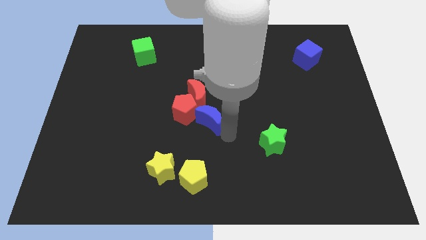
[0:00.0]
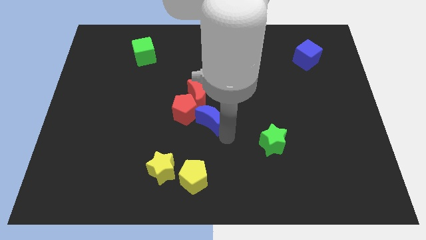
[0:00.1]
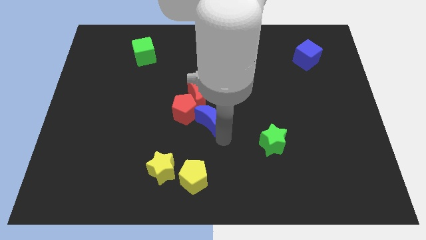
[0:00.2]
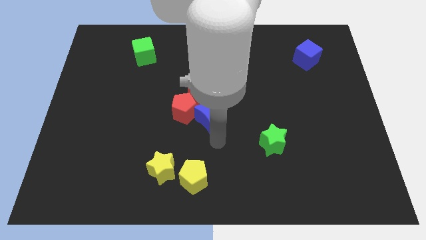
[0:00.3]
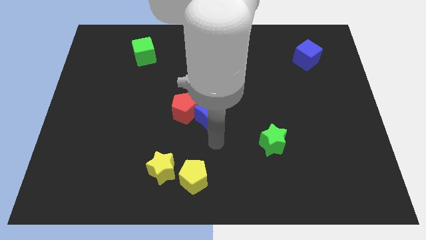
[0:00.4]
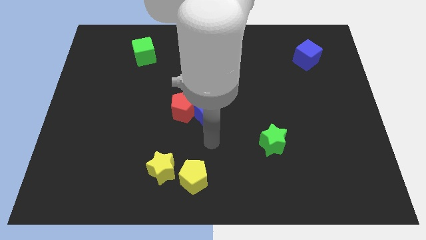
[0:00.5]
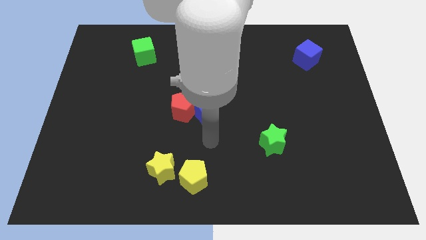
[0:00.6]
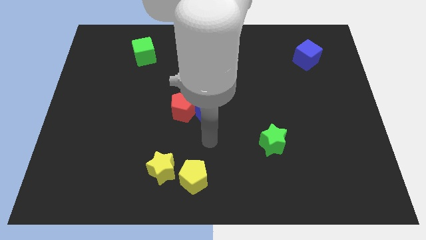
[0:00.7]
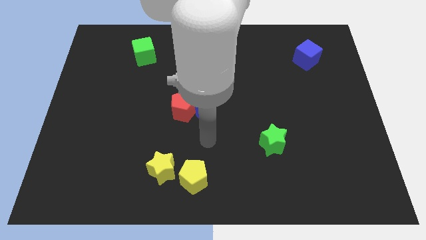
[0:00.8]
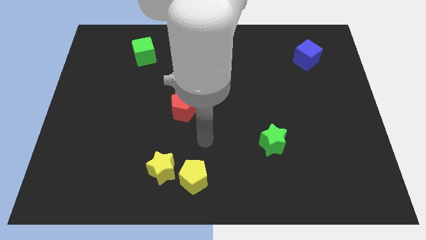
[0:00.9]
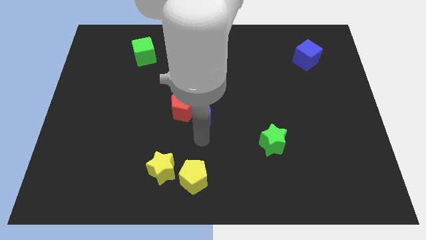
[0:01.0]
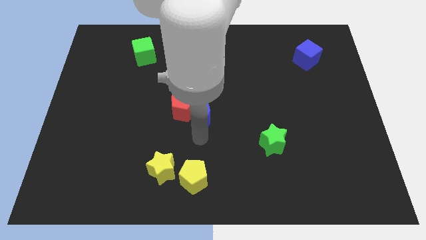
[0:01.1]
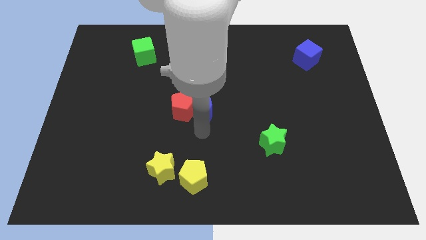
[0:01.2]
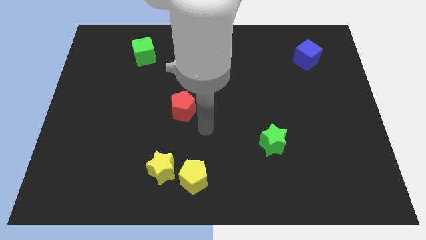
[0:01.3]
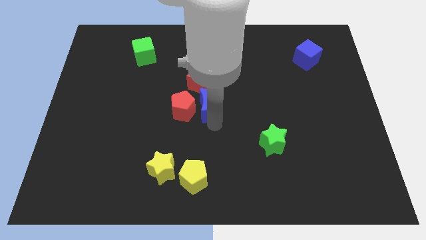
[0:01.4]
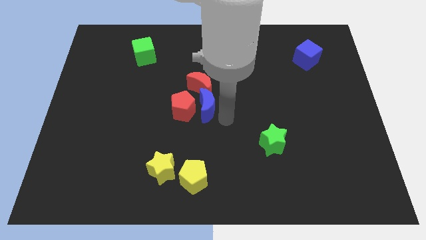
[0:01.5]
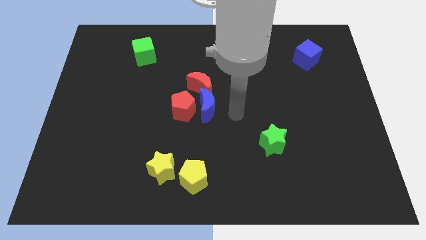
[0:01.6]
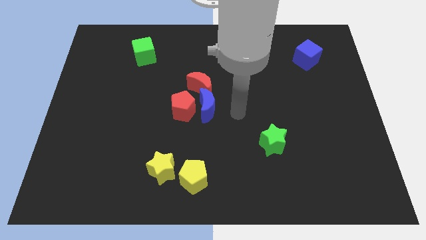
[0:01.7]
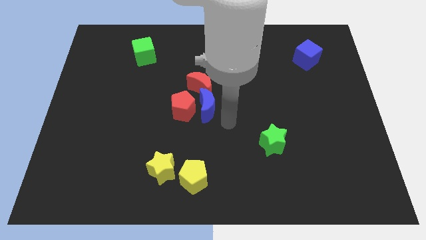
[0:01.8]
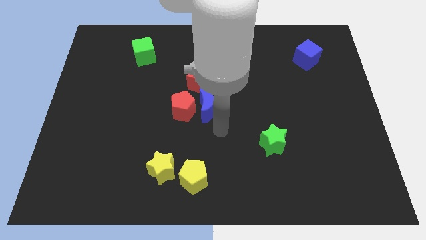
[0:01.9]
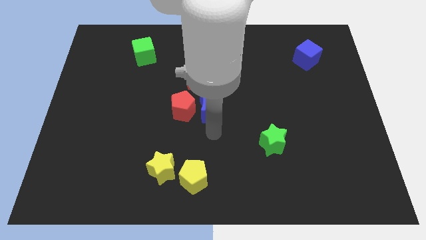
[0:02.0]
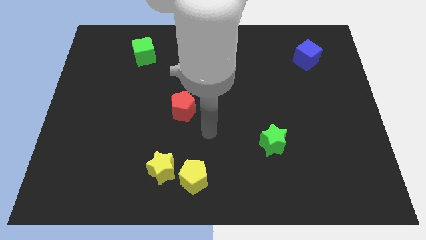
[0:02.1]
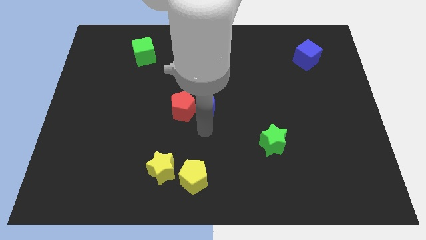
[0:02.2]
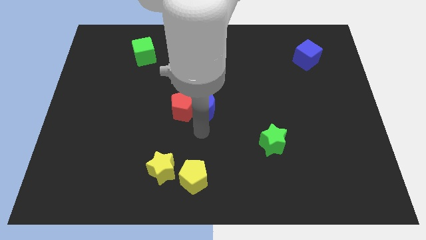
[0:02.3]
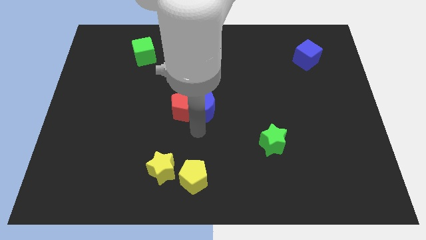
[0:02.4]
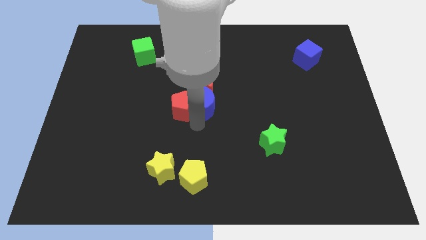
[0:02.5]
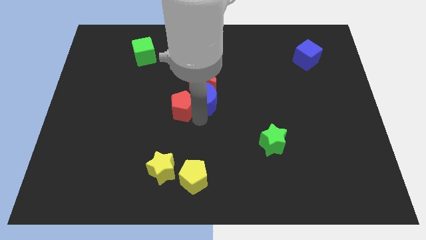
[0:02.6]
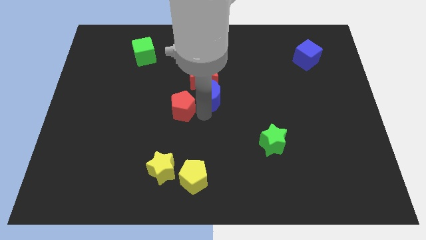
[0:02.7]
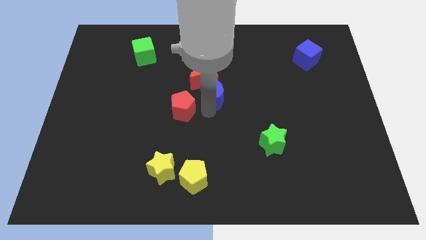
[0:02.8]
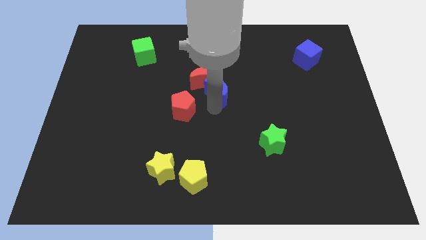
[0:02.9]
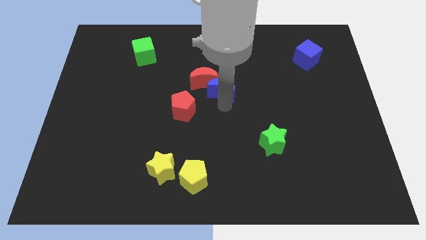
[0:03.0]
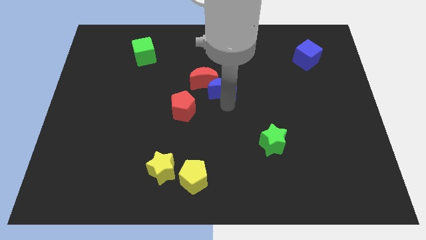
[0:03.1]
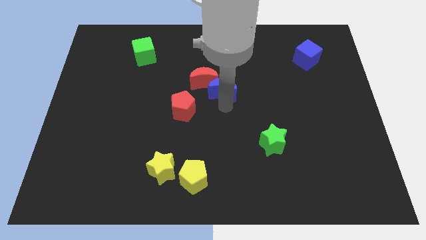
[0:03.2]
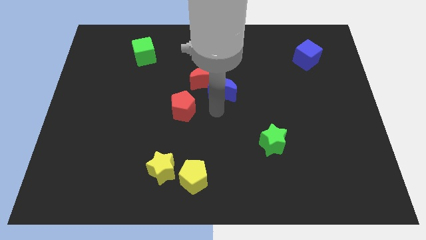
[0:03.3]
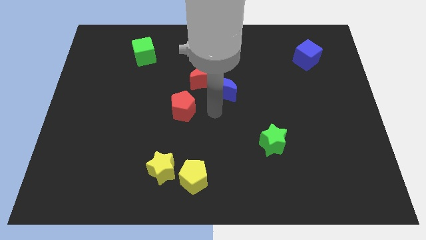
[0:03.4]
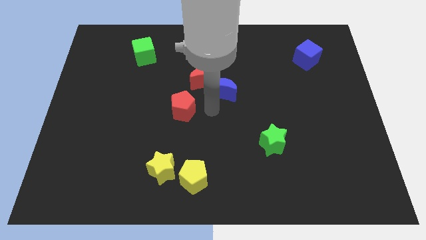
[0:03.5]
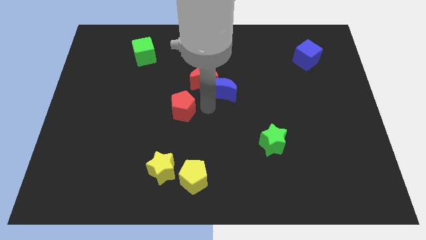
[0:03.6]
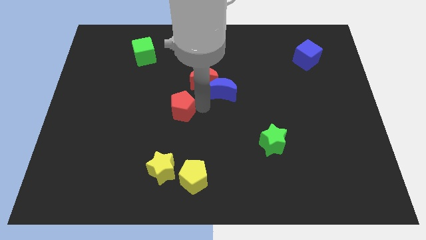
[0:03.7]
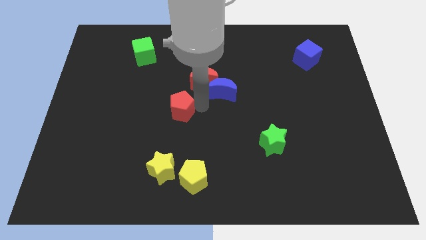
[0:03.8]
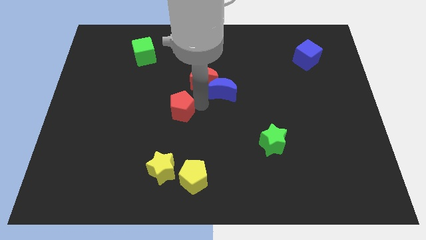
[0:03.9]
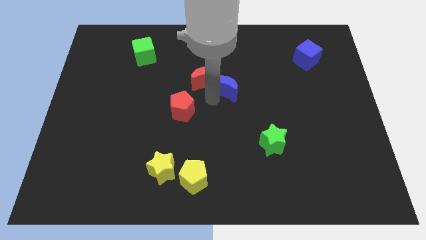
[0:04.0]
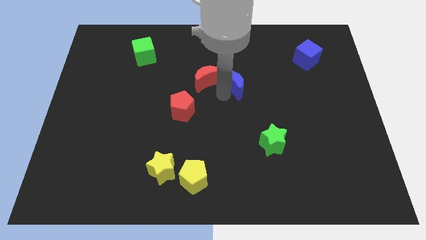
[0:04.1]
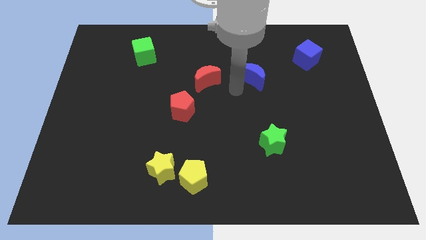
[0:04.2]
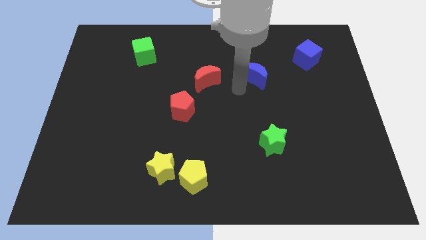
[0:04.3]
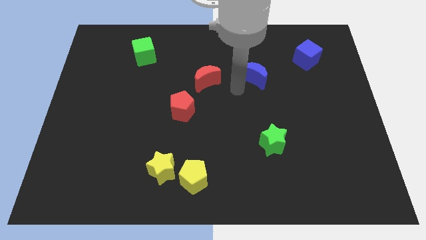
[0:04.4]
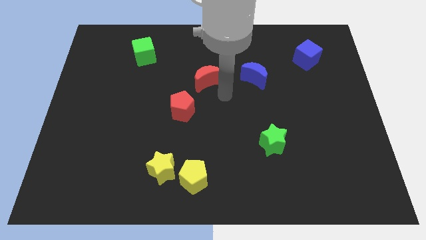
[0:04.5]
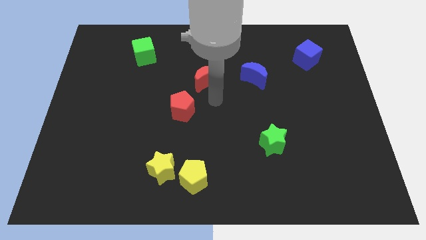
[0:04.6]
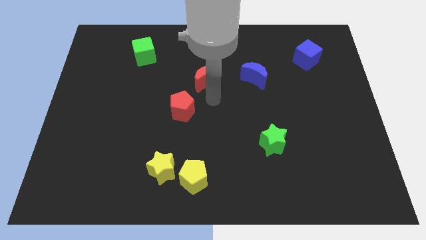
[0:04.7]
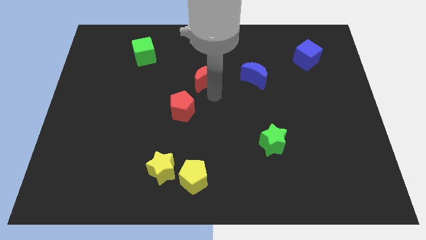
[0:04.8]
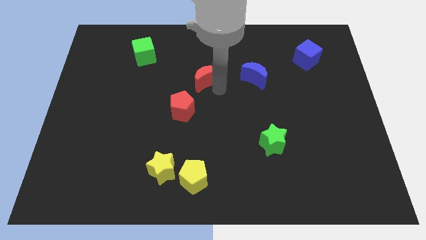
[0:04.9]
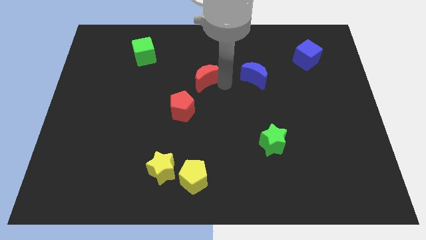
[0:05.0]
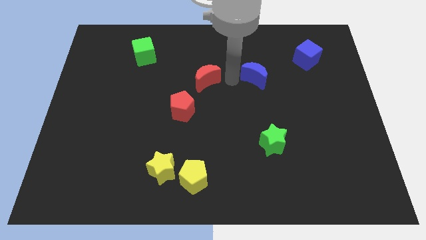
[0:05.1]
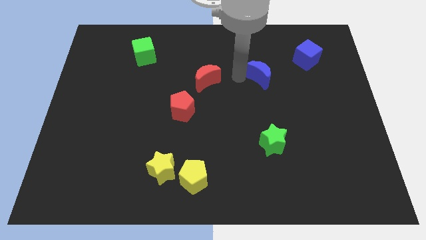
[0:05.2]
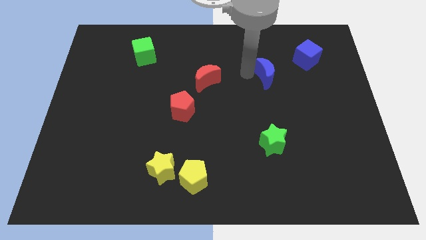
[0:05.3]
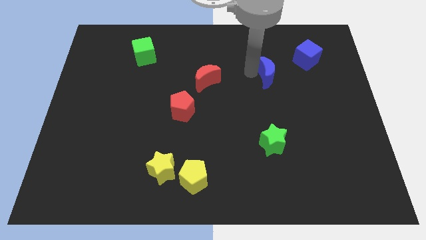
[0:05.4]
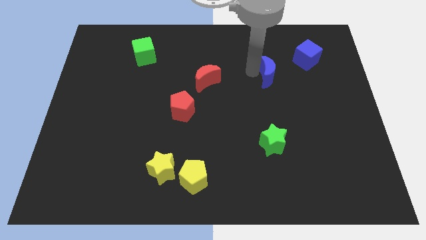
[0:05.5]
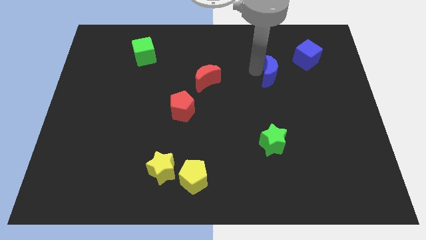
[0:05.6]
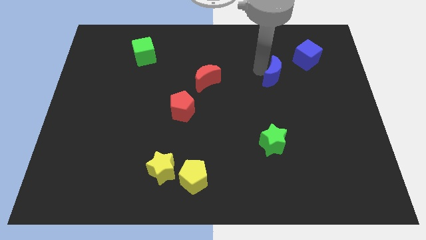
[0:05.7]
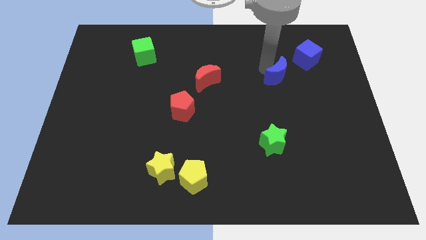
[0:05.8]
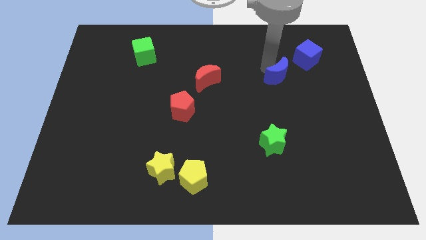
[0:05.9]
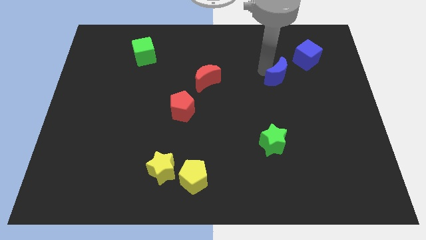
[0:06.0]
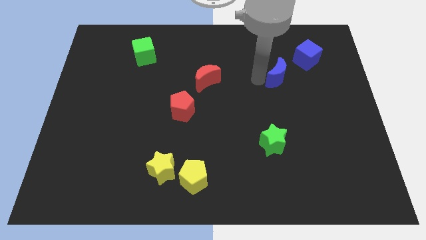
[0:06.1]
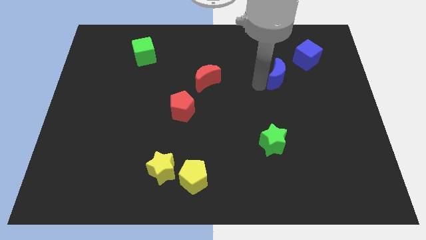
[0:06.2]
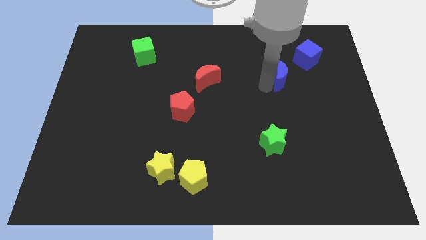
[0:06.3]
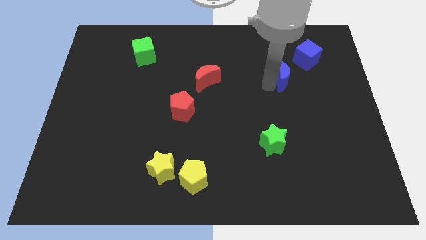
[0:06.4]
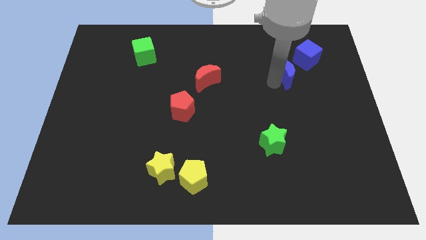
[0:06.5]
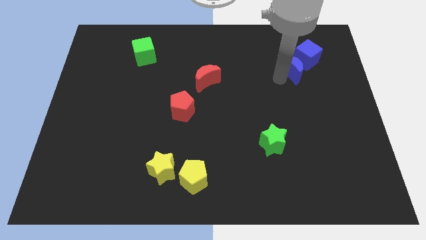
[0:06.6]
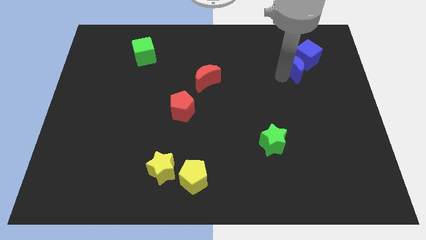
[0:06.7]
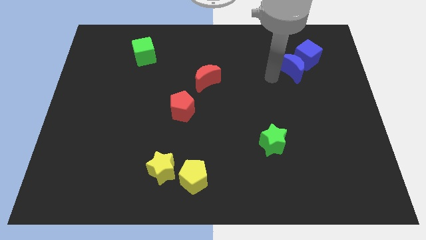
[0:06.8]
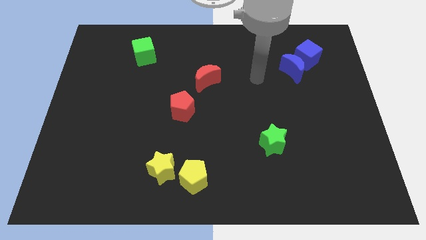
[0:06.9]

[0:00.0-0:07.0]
push the blue crescent into the blue cube

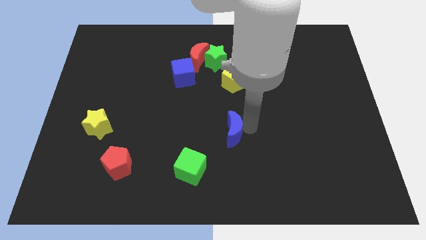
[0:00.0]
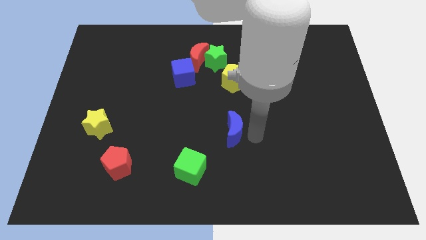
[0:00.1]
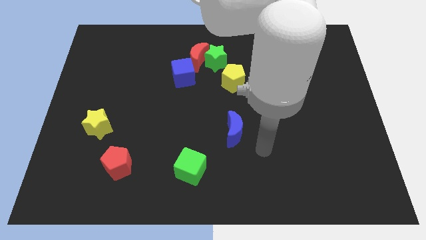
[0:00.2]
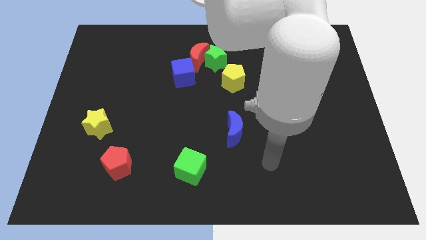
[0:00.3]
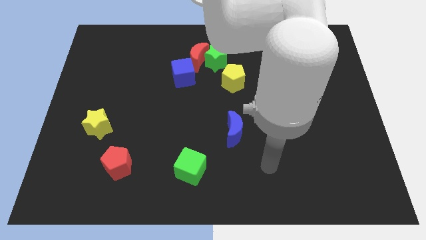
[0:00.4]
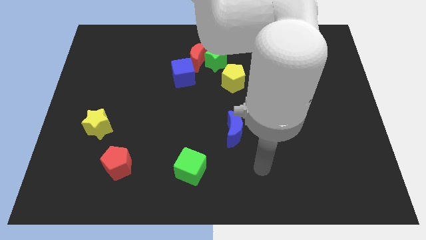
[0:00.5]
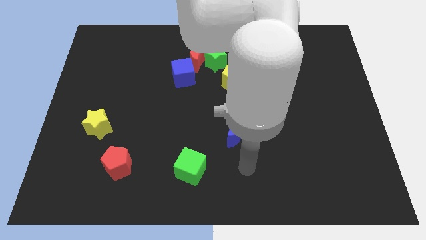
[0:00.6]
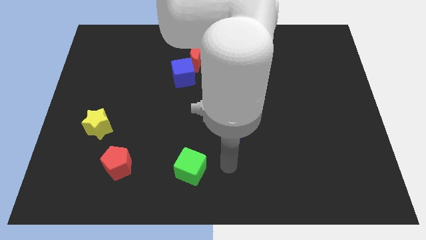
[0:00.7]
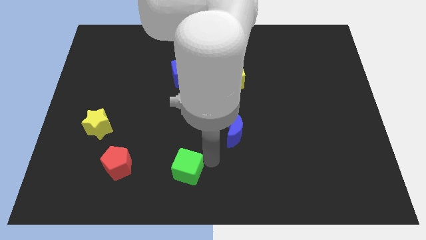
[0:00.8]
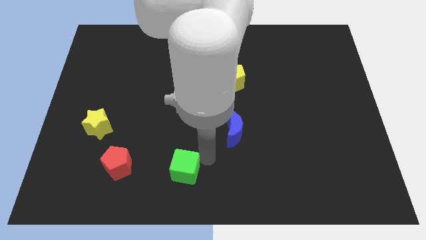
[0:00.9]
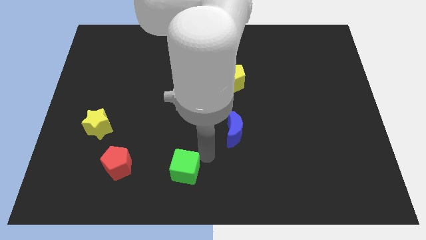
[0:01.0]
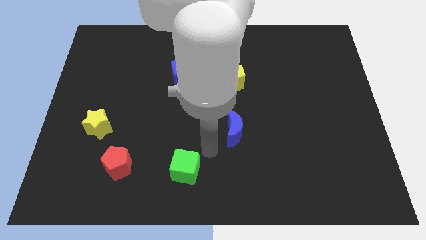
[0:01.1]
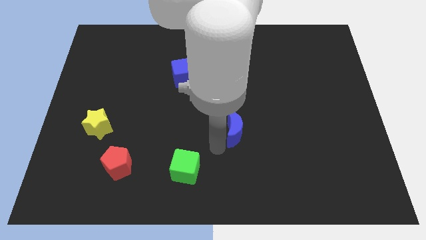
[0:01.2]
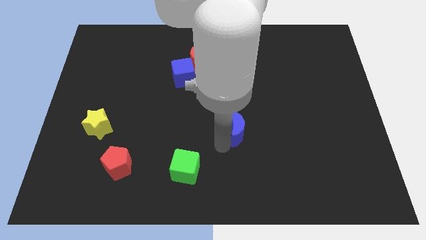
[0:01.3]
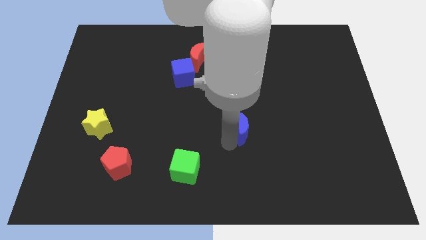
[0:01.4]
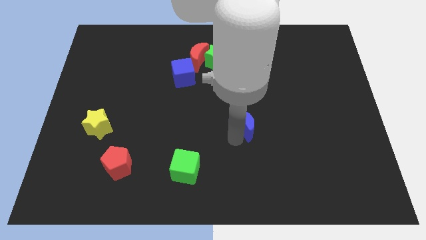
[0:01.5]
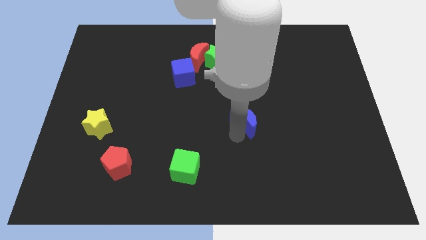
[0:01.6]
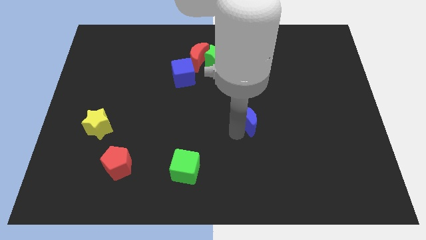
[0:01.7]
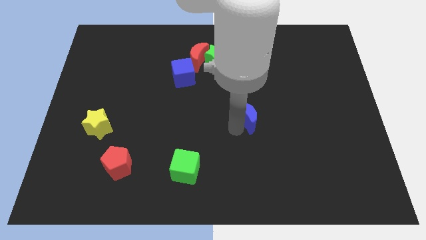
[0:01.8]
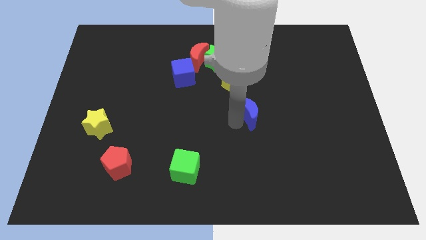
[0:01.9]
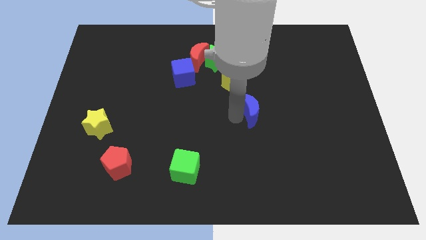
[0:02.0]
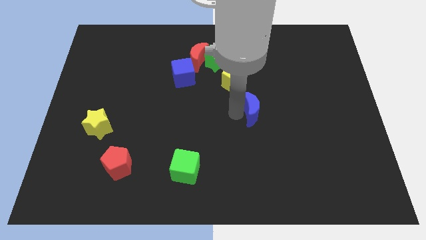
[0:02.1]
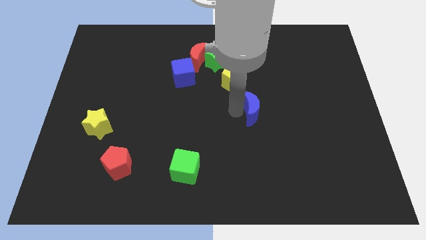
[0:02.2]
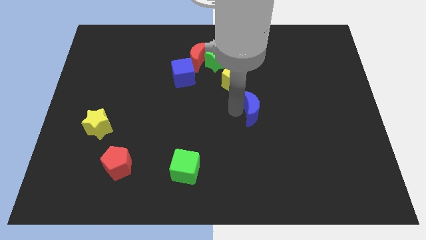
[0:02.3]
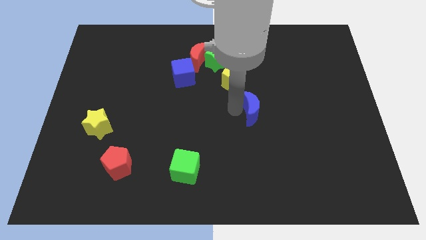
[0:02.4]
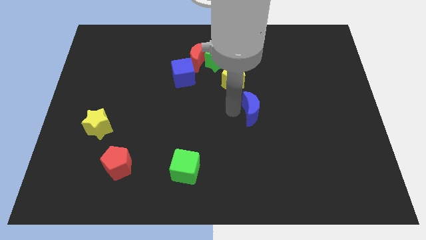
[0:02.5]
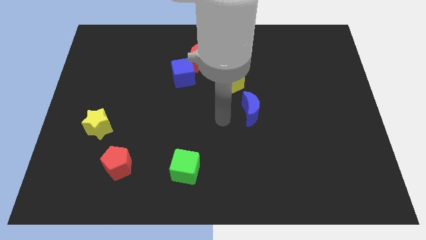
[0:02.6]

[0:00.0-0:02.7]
move blue crescent towards yellow pentagon
